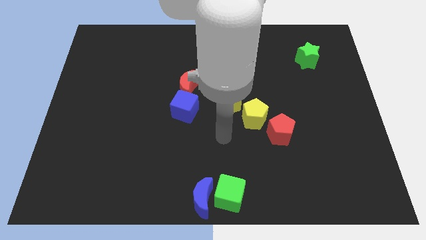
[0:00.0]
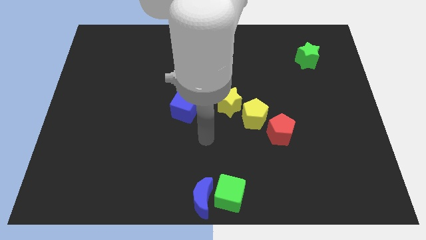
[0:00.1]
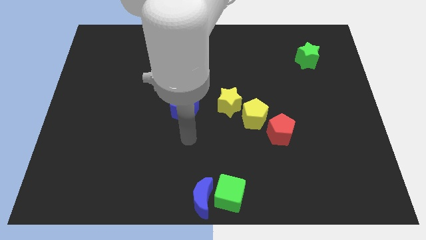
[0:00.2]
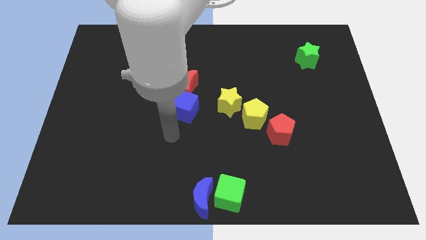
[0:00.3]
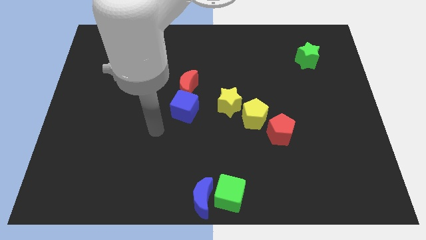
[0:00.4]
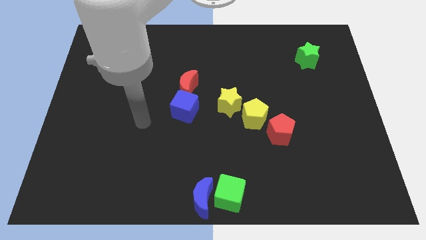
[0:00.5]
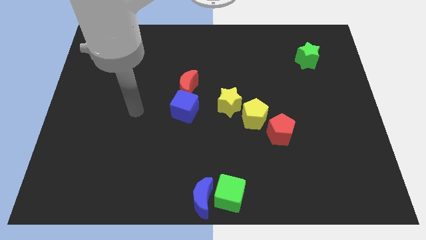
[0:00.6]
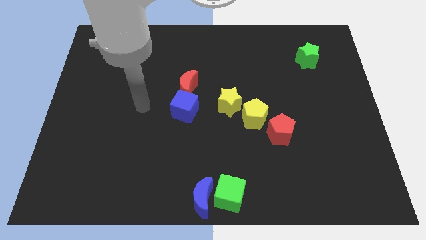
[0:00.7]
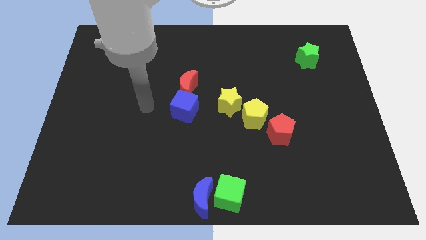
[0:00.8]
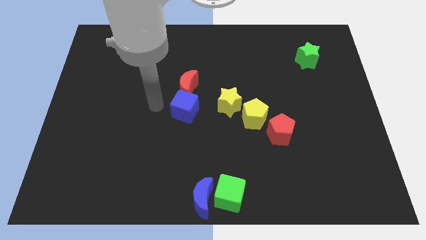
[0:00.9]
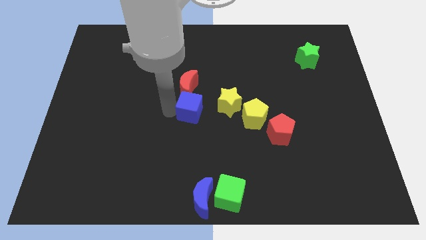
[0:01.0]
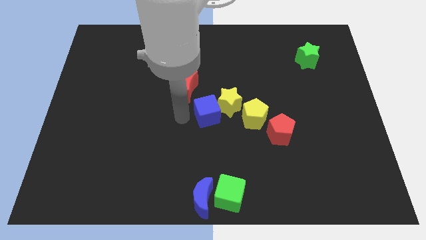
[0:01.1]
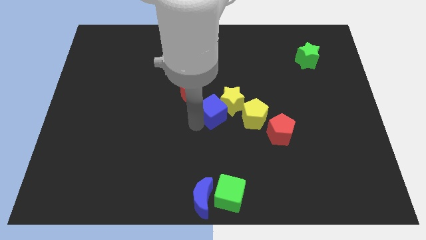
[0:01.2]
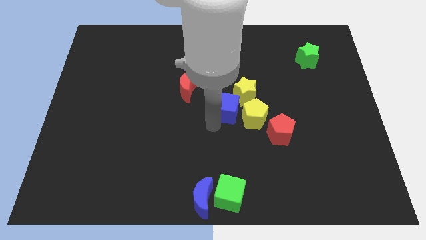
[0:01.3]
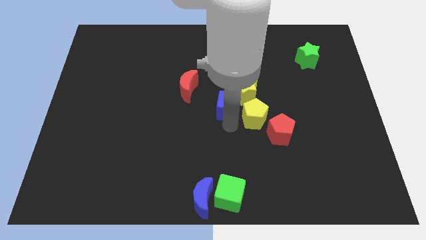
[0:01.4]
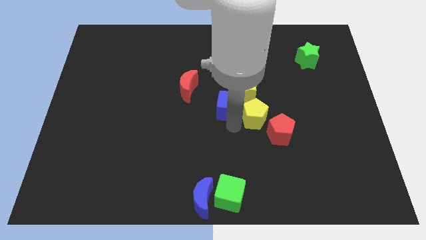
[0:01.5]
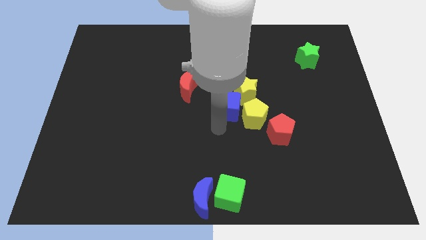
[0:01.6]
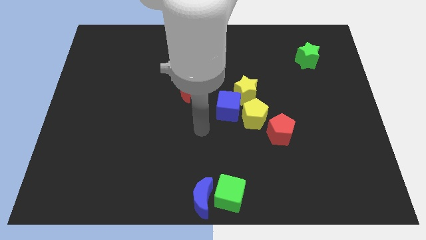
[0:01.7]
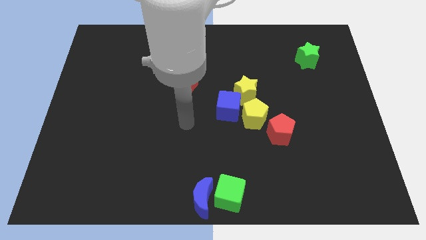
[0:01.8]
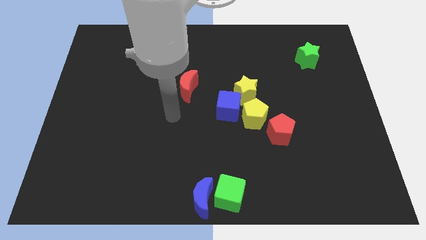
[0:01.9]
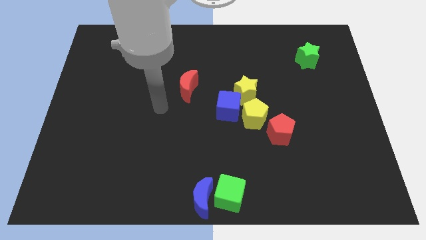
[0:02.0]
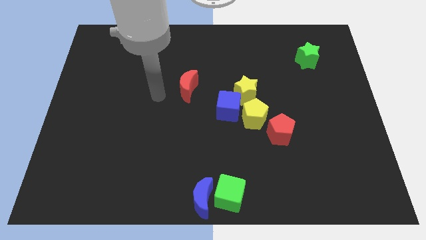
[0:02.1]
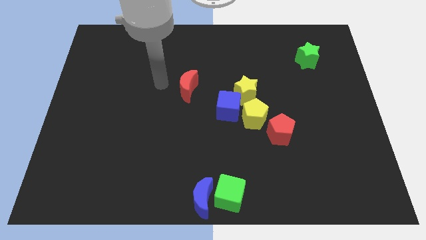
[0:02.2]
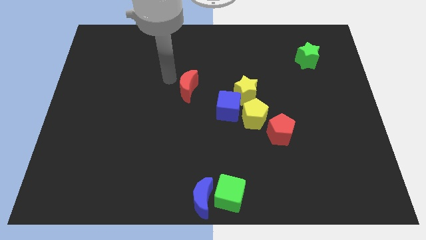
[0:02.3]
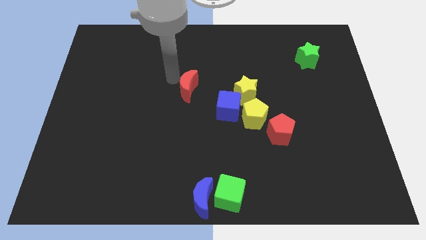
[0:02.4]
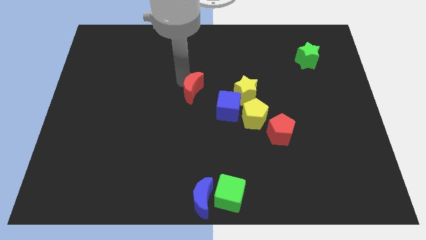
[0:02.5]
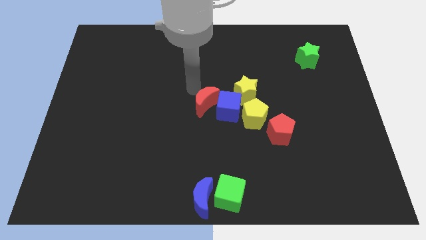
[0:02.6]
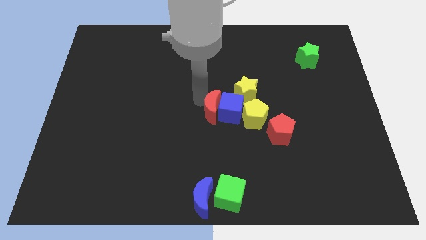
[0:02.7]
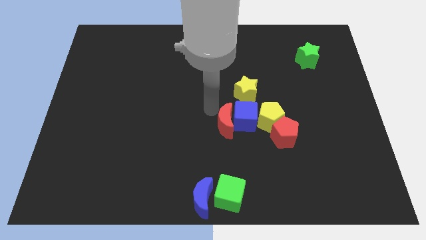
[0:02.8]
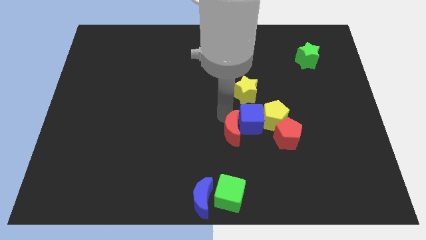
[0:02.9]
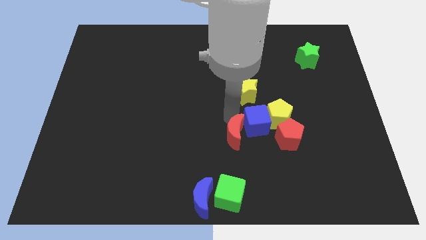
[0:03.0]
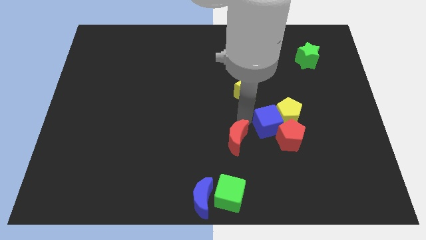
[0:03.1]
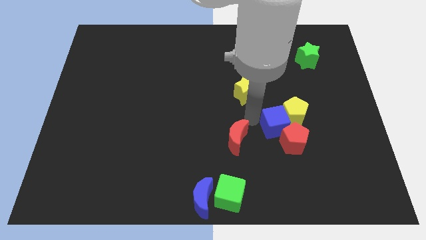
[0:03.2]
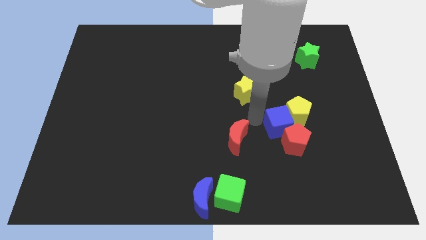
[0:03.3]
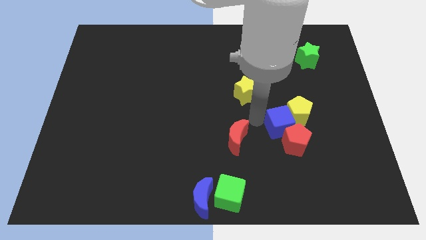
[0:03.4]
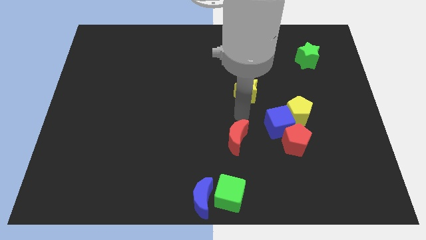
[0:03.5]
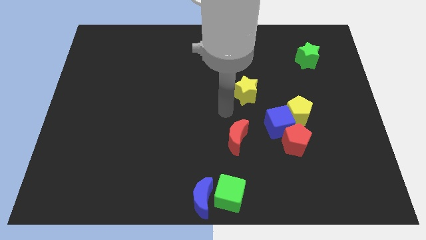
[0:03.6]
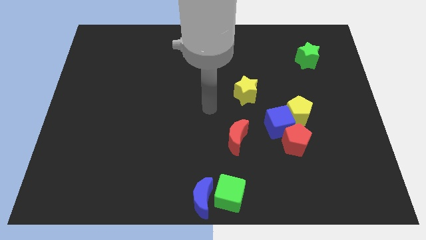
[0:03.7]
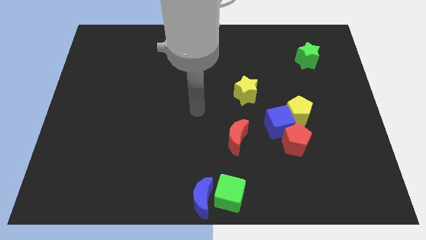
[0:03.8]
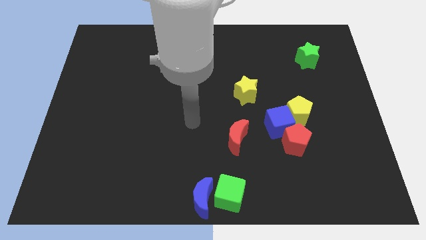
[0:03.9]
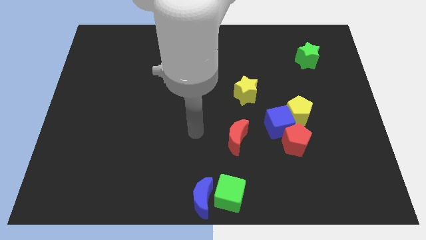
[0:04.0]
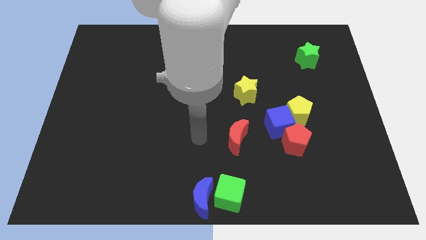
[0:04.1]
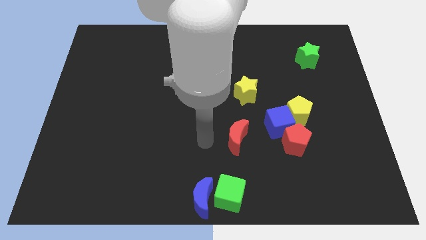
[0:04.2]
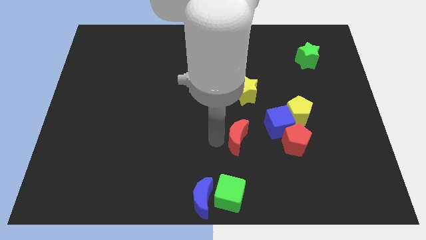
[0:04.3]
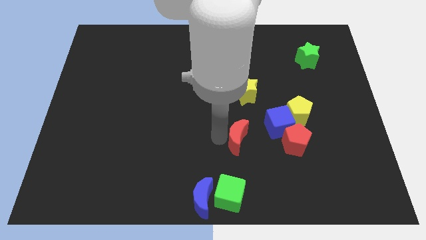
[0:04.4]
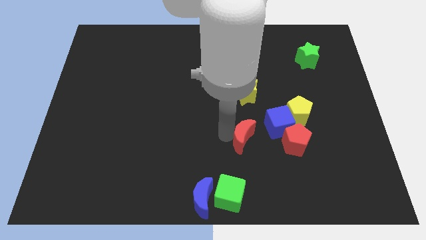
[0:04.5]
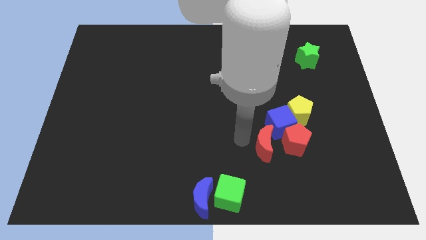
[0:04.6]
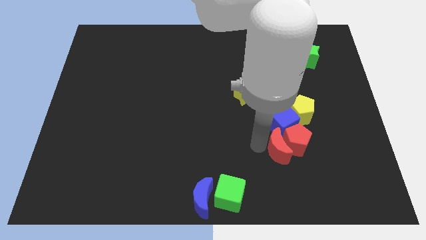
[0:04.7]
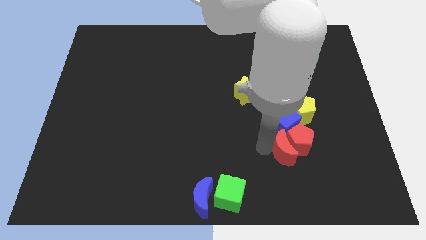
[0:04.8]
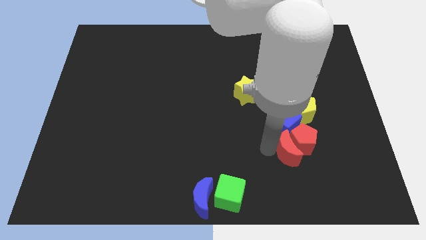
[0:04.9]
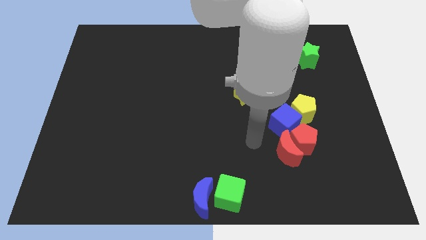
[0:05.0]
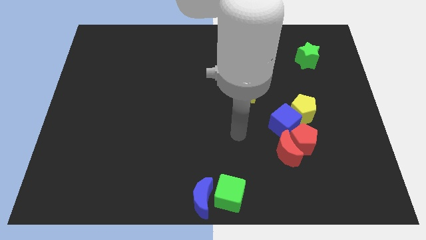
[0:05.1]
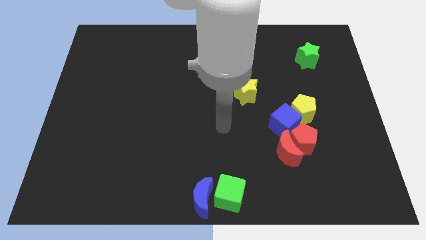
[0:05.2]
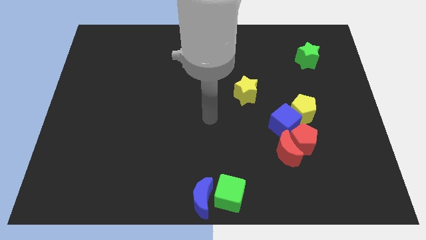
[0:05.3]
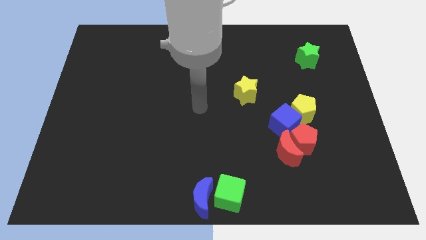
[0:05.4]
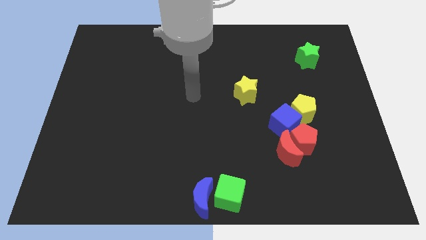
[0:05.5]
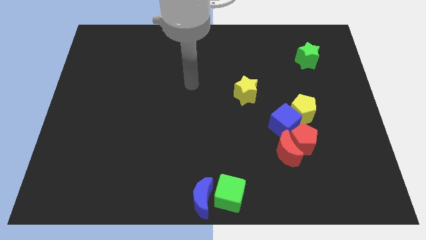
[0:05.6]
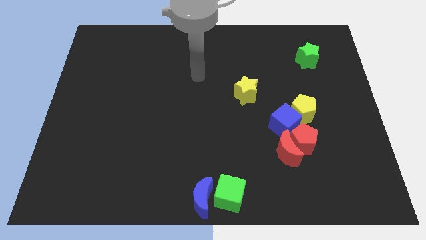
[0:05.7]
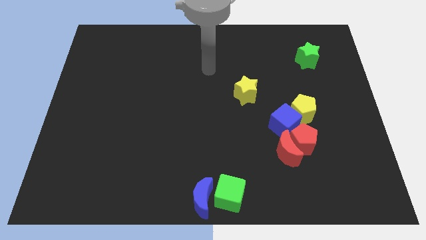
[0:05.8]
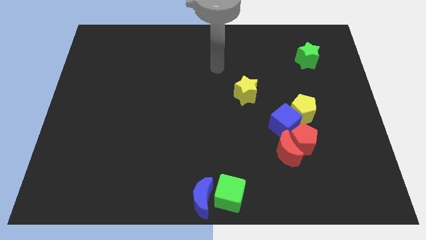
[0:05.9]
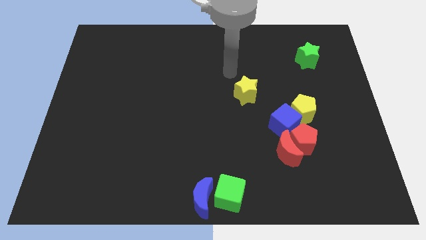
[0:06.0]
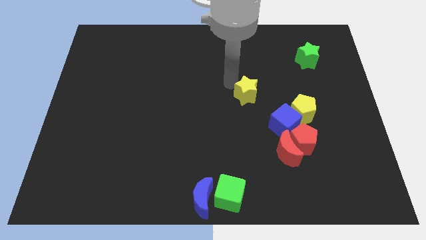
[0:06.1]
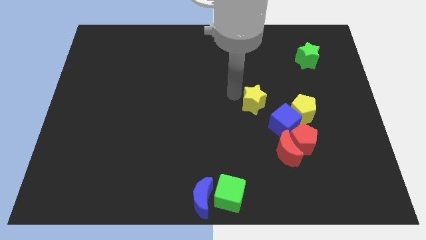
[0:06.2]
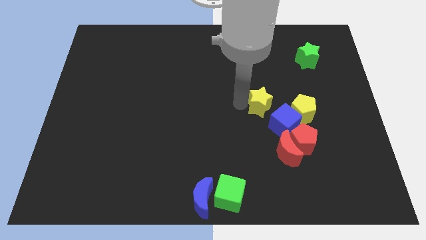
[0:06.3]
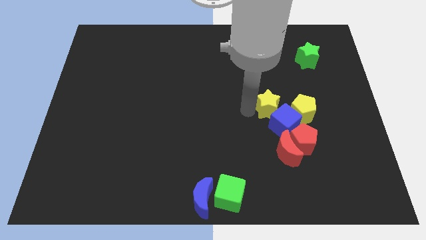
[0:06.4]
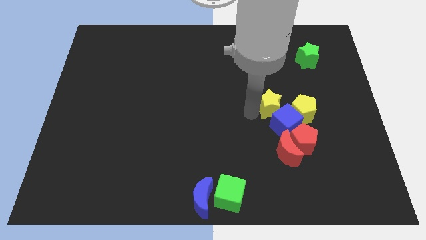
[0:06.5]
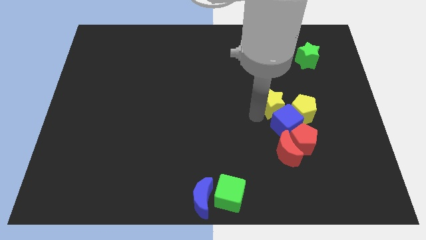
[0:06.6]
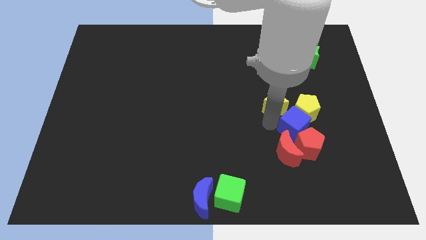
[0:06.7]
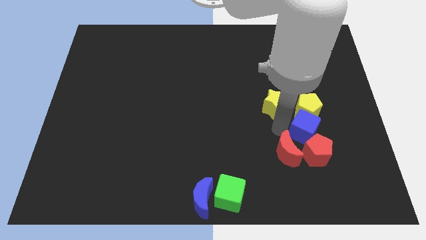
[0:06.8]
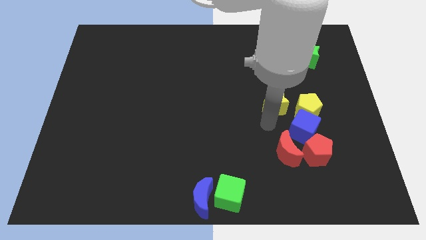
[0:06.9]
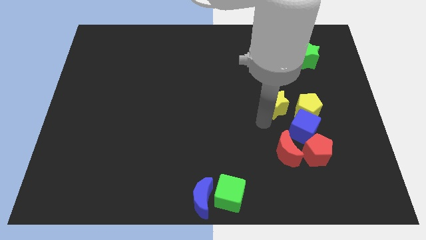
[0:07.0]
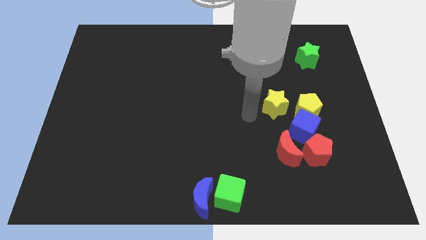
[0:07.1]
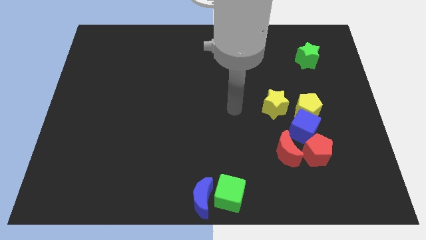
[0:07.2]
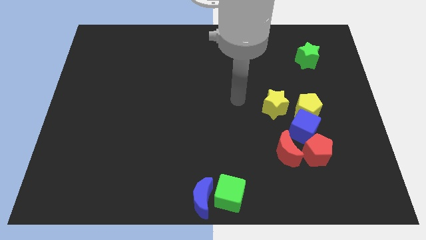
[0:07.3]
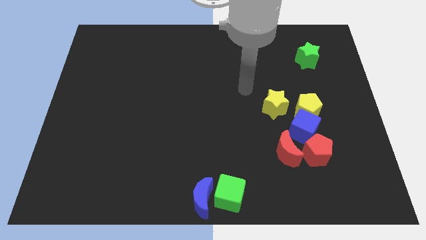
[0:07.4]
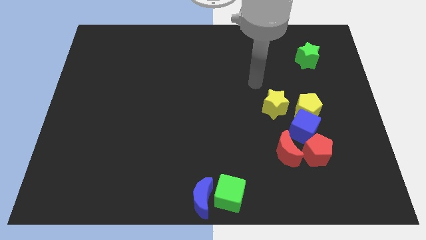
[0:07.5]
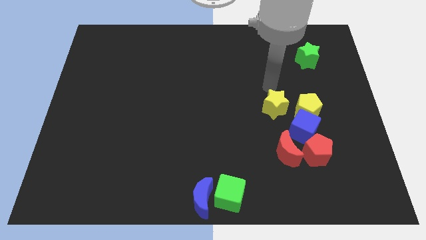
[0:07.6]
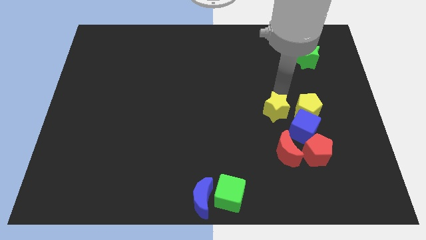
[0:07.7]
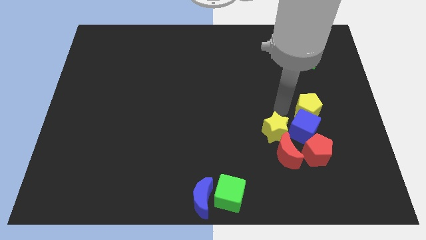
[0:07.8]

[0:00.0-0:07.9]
push the group of blocks towards right

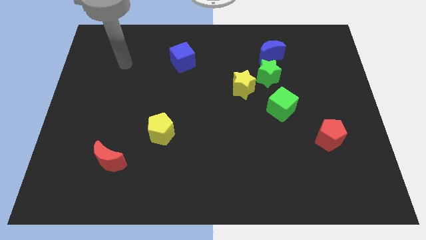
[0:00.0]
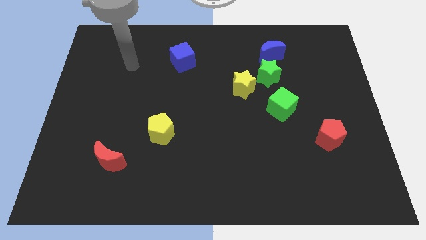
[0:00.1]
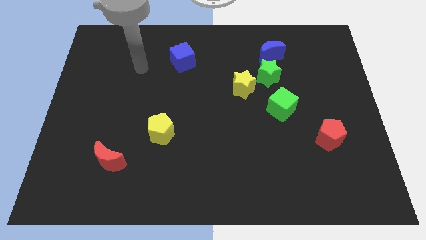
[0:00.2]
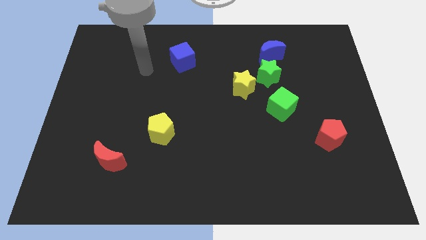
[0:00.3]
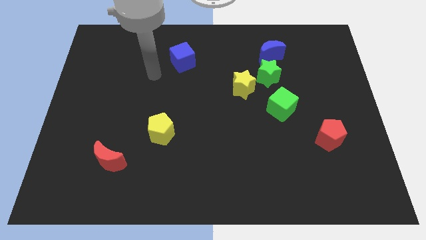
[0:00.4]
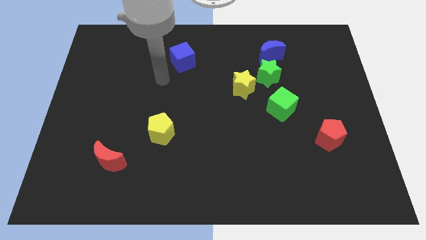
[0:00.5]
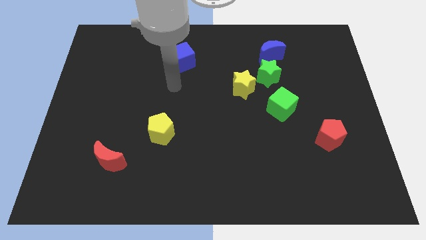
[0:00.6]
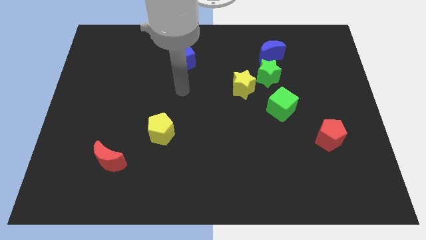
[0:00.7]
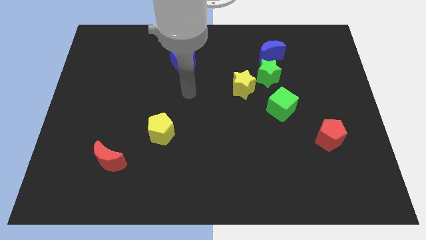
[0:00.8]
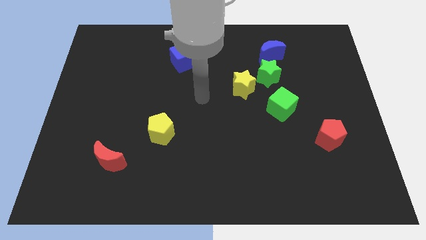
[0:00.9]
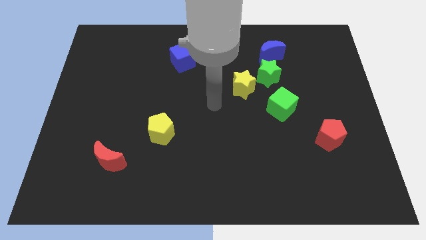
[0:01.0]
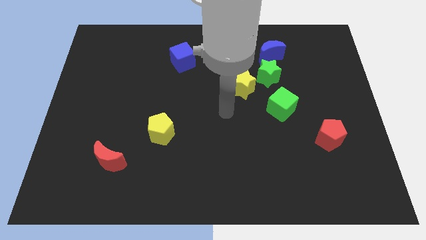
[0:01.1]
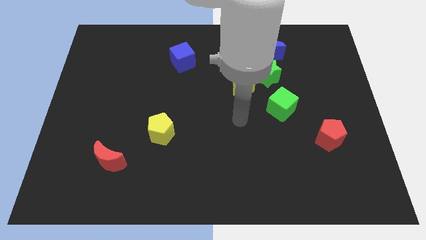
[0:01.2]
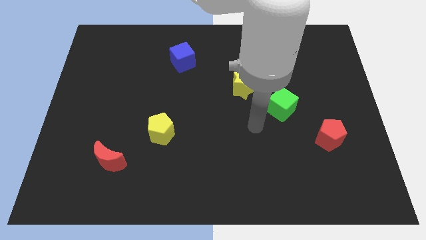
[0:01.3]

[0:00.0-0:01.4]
place your arm to the bottom of yellow star

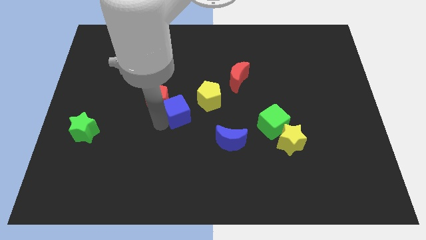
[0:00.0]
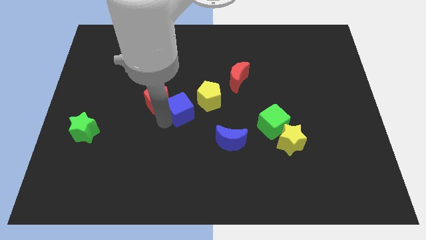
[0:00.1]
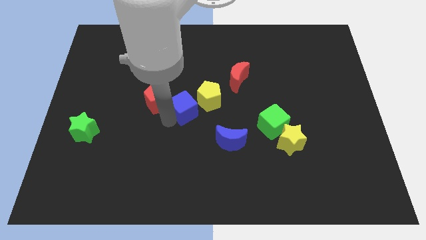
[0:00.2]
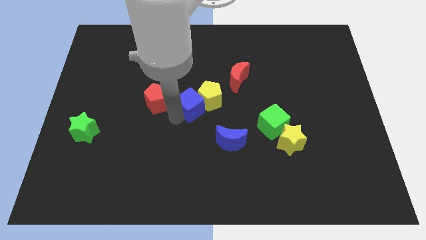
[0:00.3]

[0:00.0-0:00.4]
push the yellow pentagon with the blue cube
